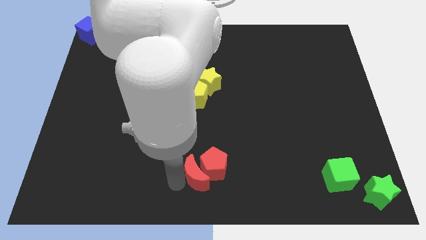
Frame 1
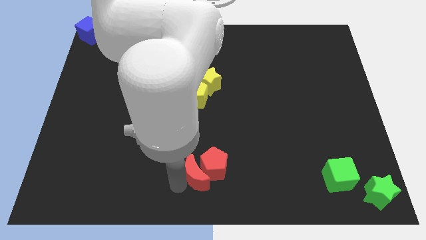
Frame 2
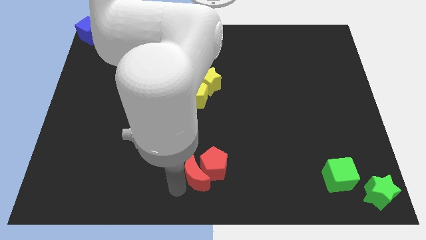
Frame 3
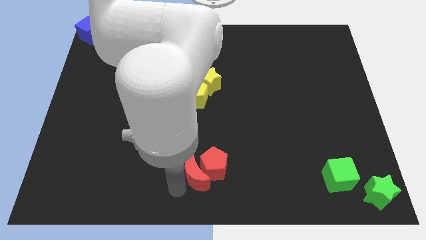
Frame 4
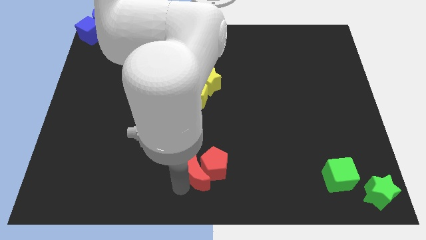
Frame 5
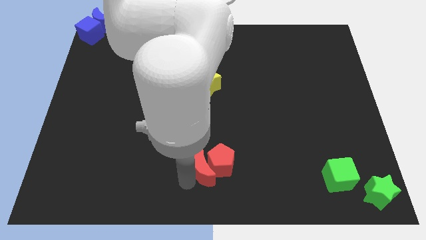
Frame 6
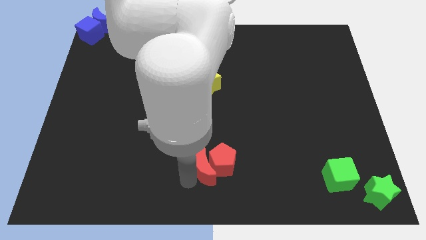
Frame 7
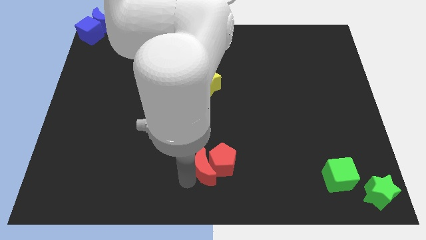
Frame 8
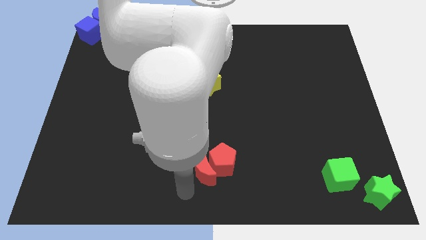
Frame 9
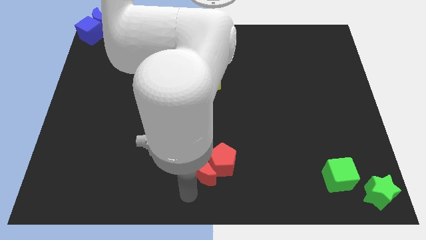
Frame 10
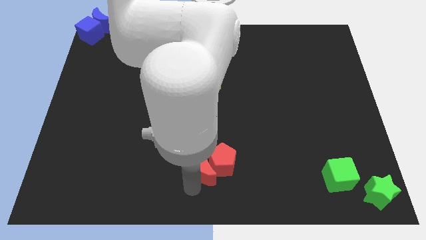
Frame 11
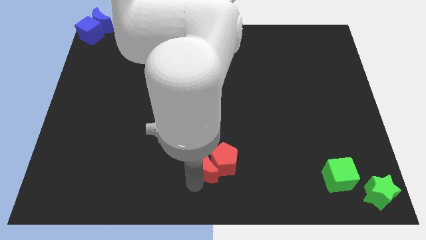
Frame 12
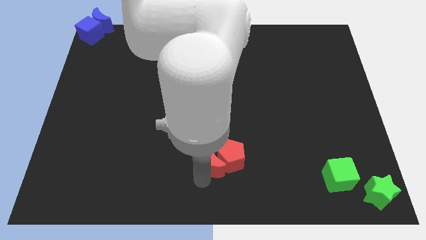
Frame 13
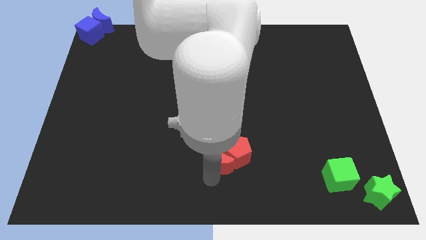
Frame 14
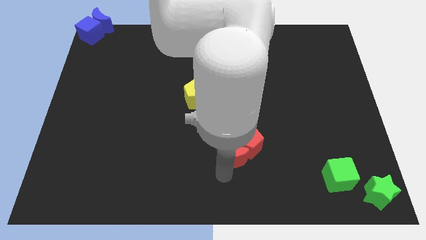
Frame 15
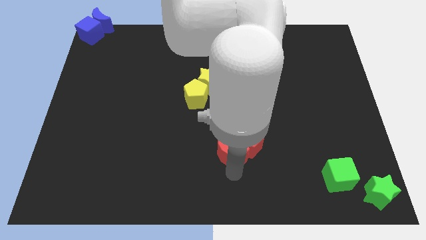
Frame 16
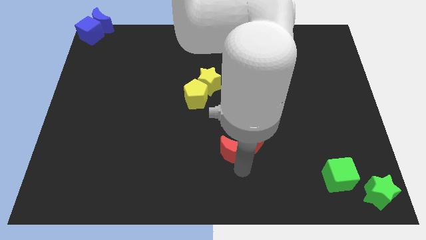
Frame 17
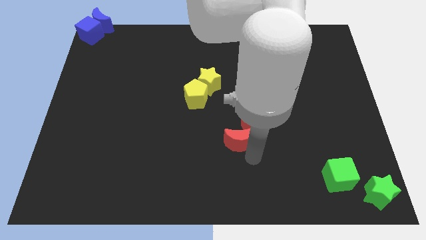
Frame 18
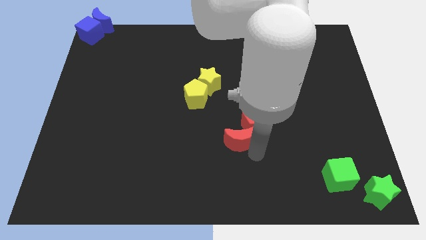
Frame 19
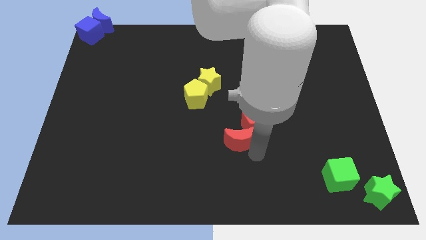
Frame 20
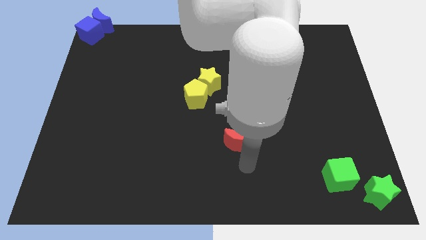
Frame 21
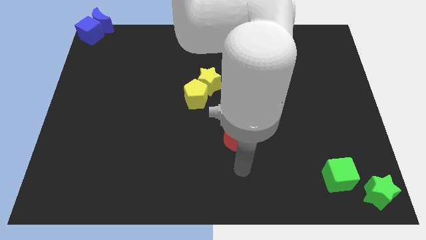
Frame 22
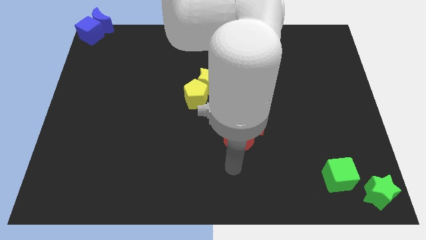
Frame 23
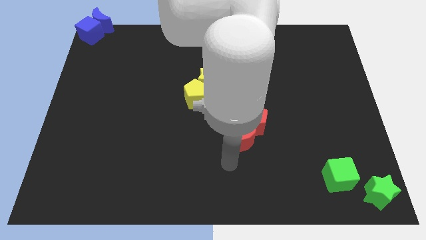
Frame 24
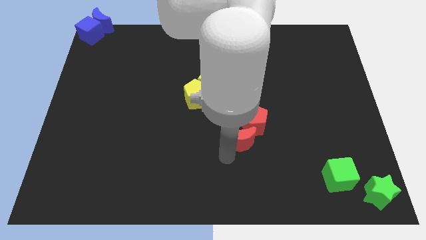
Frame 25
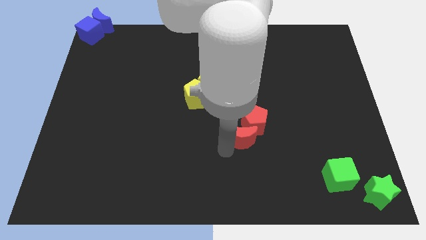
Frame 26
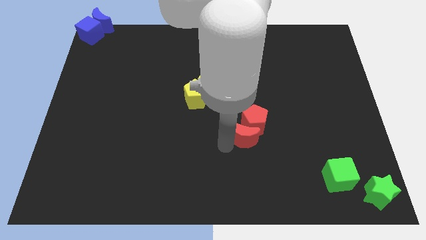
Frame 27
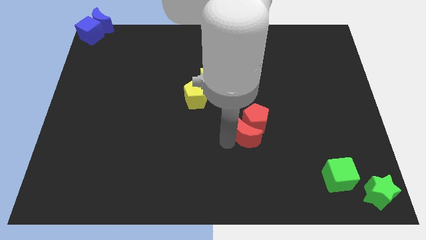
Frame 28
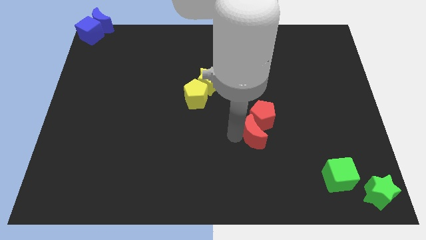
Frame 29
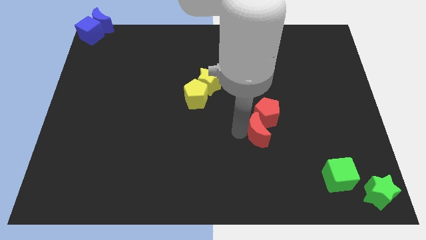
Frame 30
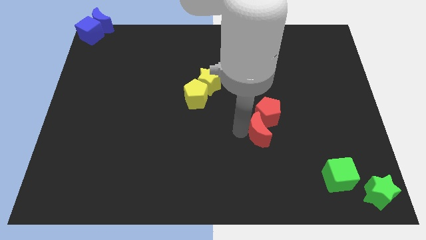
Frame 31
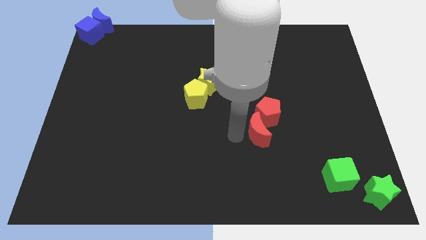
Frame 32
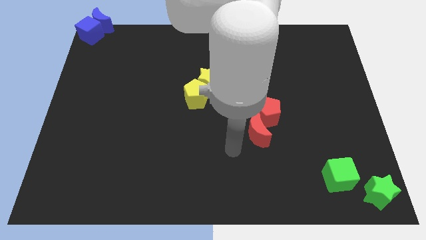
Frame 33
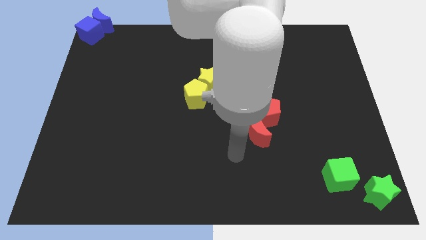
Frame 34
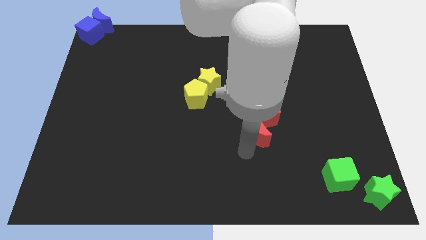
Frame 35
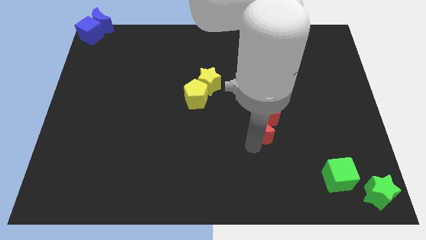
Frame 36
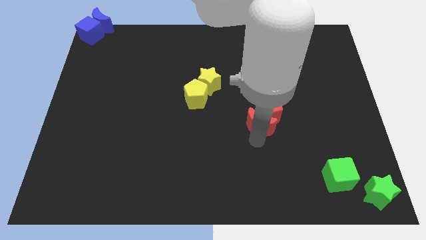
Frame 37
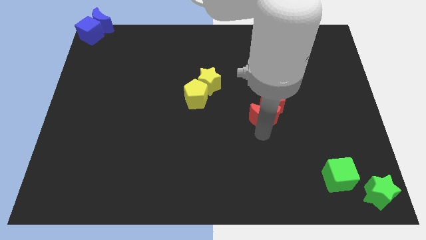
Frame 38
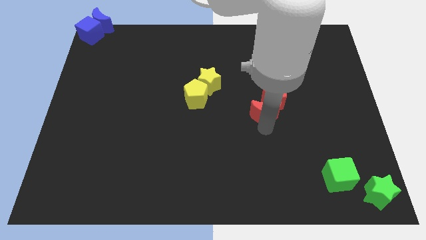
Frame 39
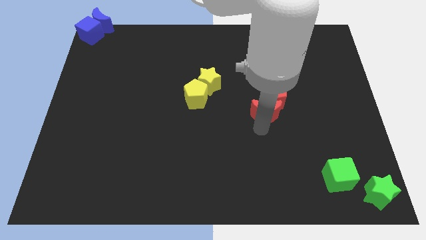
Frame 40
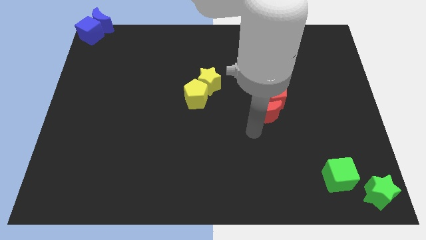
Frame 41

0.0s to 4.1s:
push red moon along with the red pentagon towards the center of the board

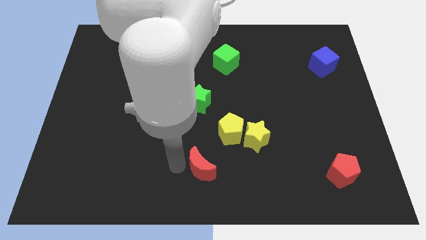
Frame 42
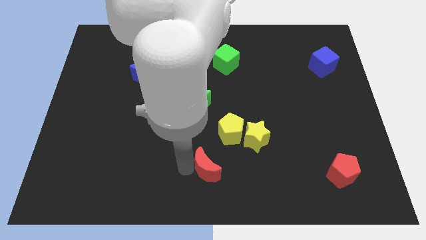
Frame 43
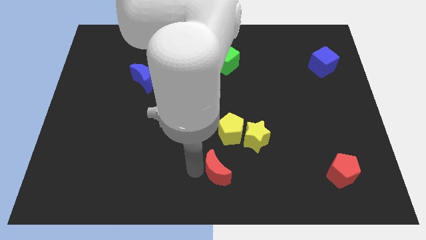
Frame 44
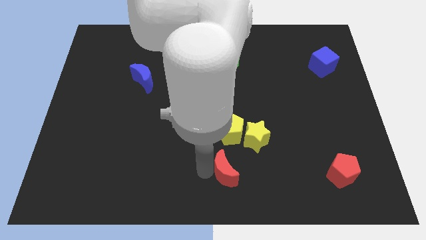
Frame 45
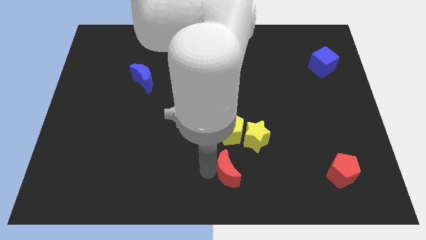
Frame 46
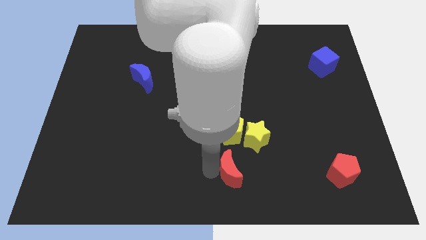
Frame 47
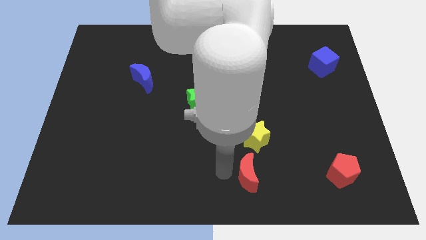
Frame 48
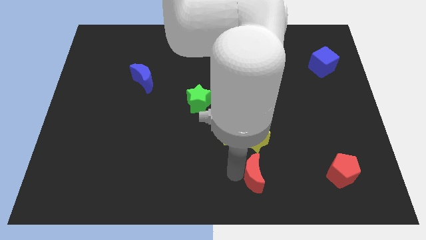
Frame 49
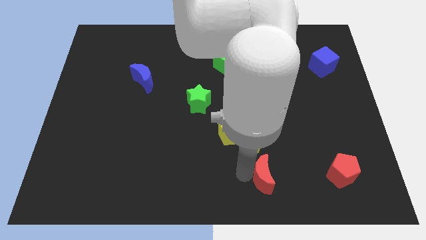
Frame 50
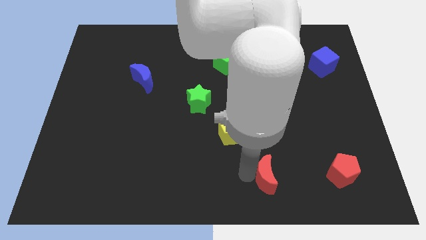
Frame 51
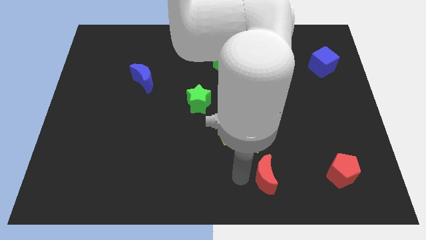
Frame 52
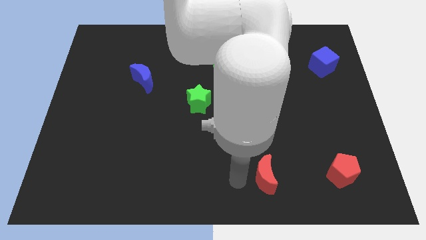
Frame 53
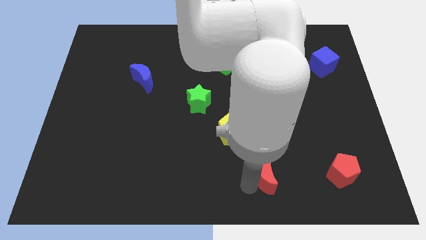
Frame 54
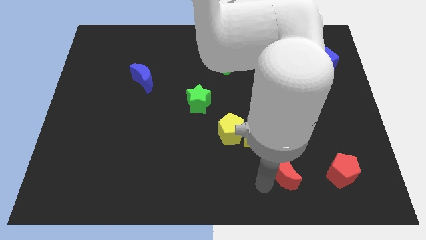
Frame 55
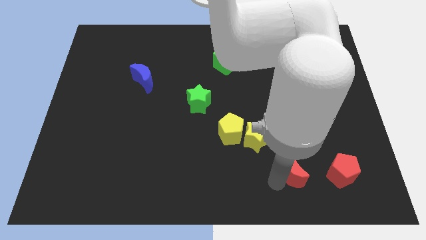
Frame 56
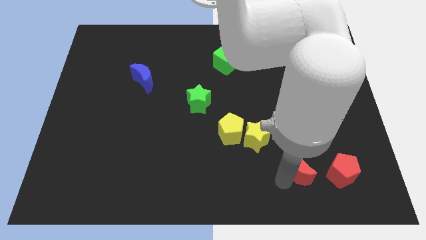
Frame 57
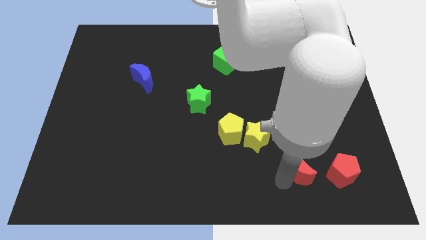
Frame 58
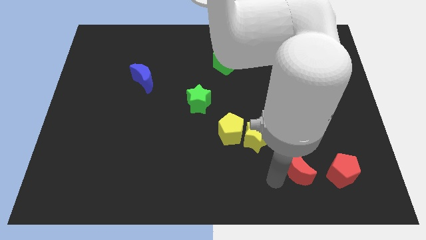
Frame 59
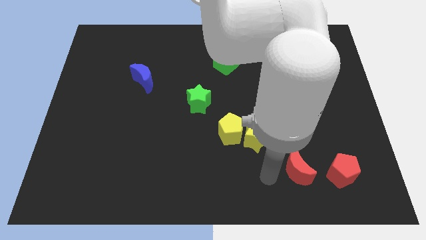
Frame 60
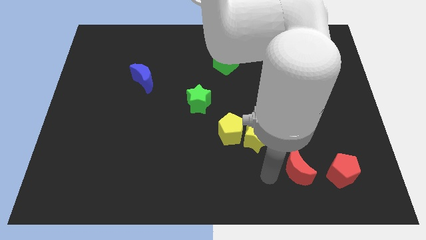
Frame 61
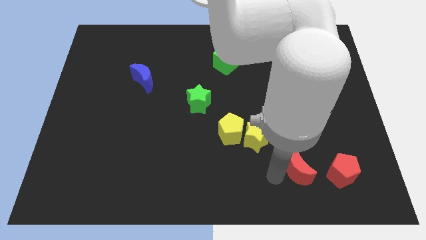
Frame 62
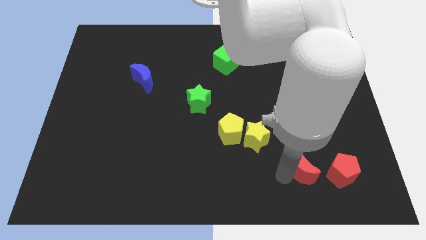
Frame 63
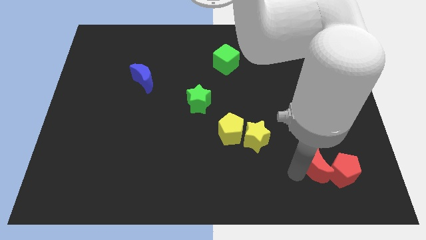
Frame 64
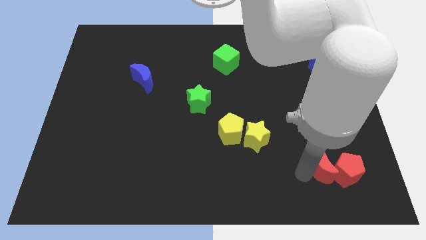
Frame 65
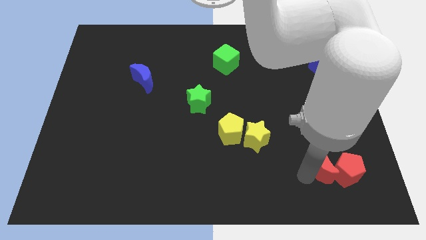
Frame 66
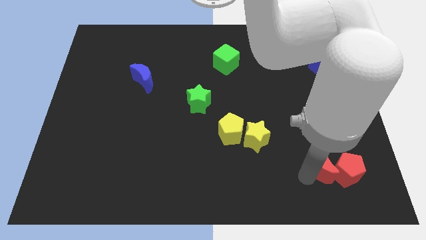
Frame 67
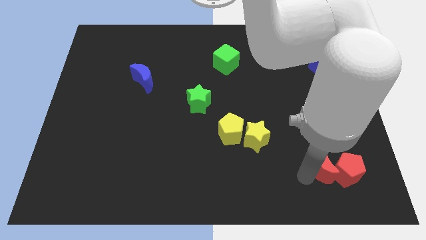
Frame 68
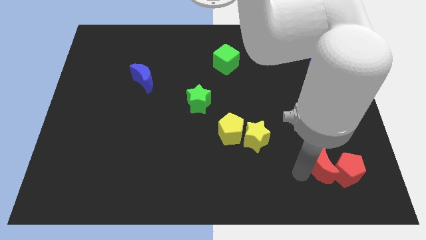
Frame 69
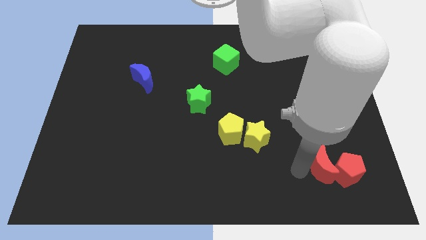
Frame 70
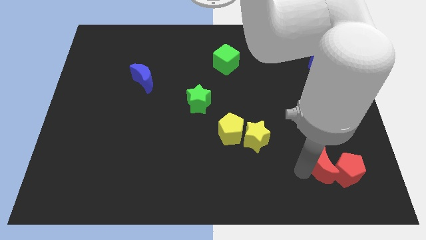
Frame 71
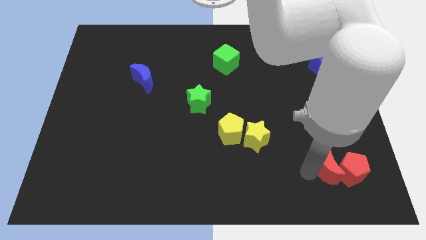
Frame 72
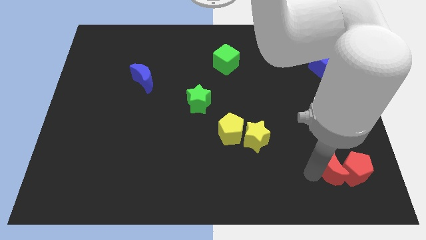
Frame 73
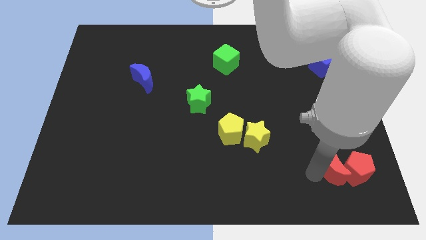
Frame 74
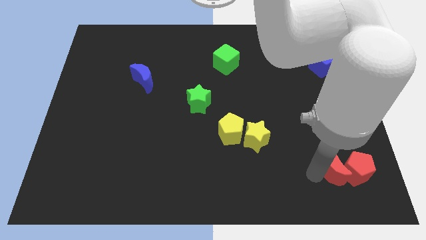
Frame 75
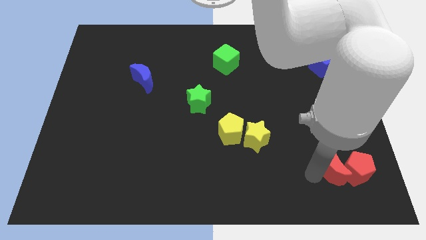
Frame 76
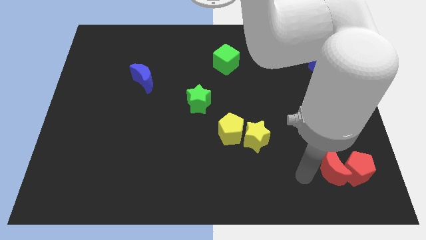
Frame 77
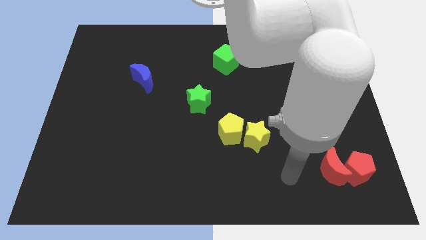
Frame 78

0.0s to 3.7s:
push the red crescent into the red pentagon

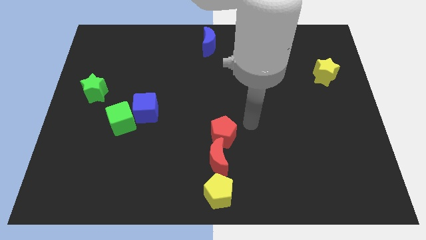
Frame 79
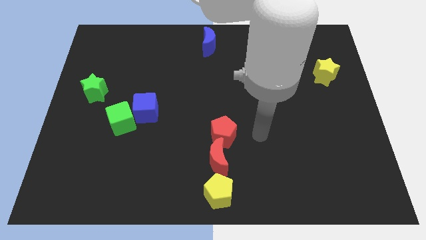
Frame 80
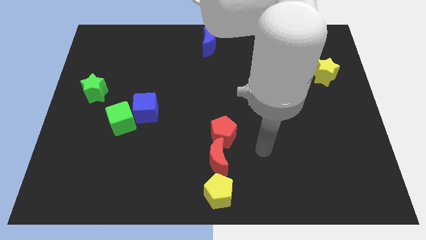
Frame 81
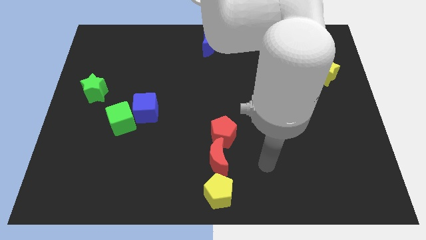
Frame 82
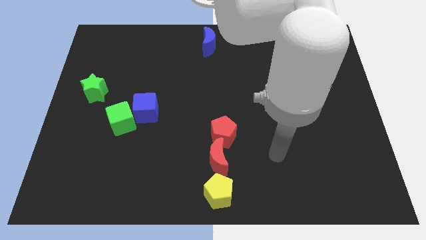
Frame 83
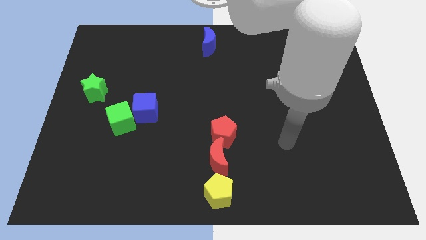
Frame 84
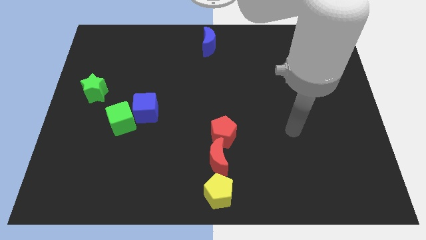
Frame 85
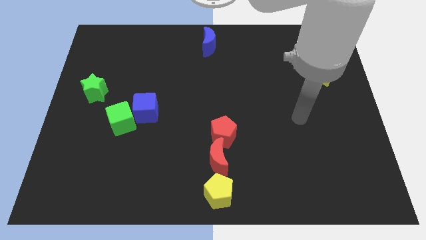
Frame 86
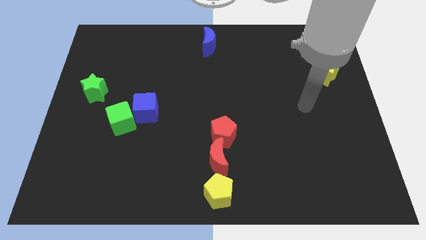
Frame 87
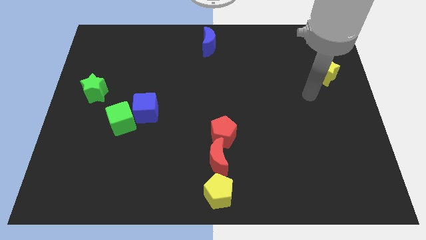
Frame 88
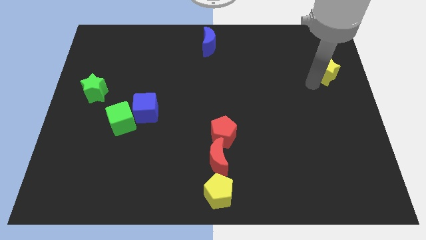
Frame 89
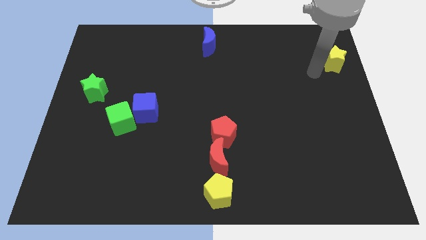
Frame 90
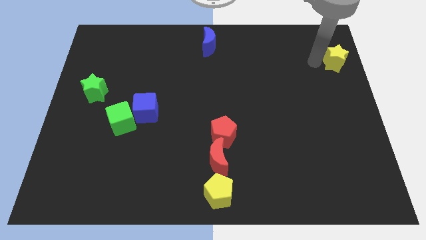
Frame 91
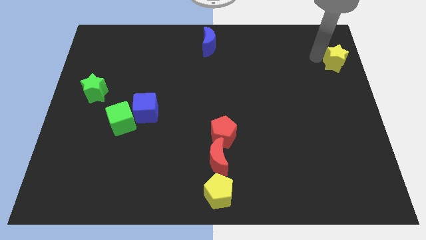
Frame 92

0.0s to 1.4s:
move your arm close to the yellow star
